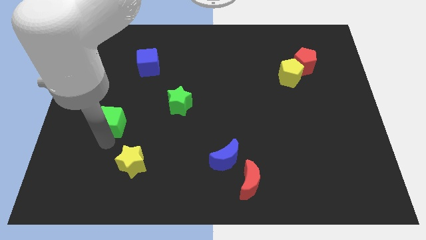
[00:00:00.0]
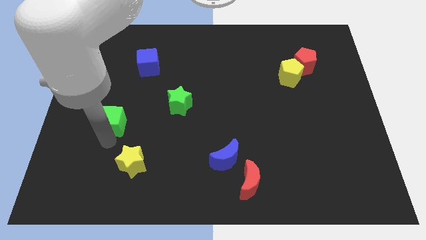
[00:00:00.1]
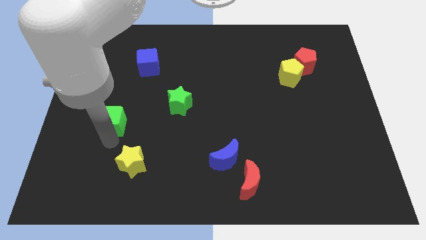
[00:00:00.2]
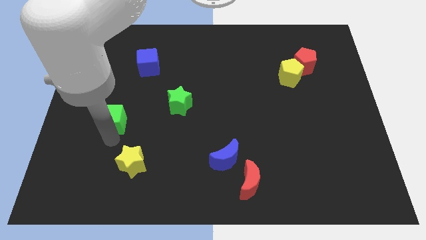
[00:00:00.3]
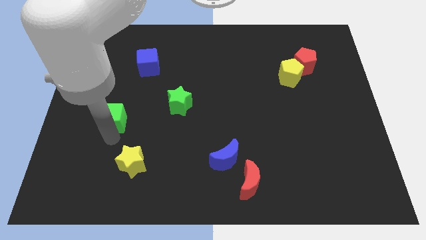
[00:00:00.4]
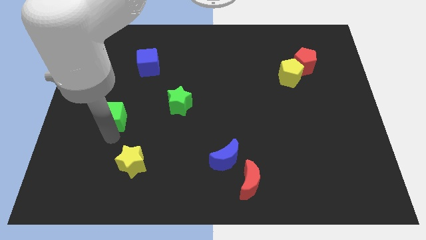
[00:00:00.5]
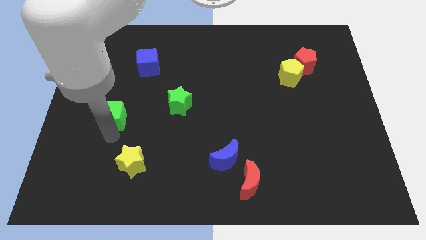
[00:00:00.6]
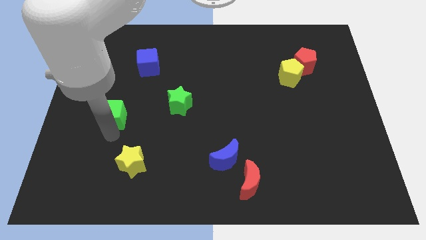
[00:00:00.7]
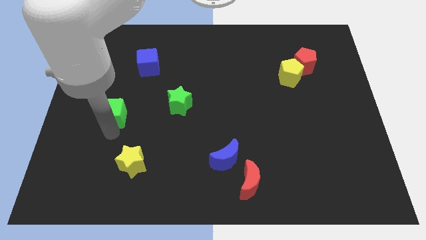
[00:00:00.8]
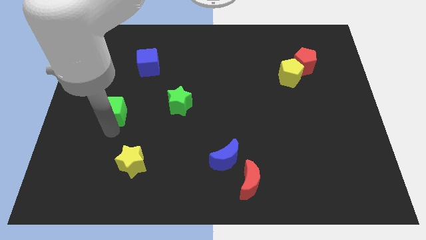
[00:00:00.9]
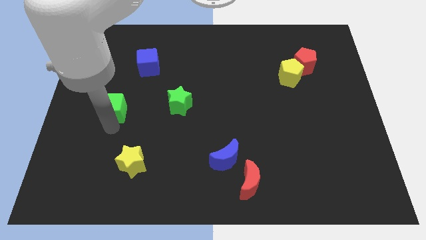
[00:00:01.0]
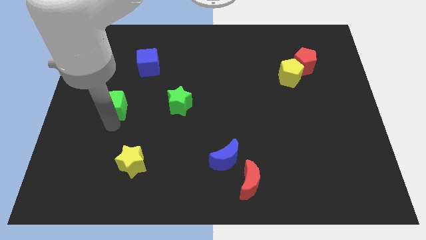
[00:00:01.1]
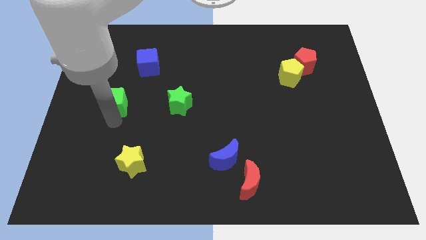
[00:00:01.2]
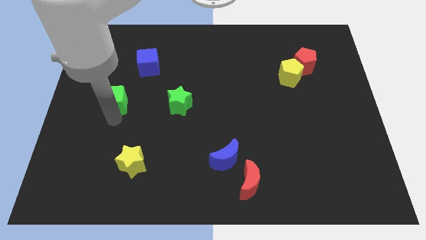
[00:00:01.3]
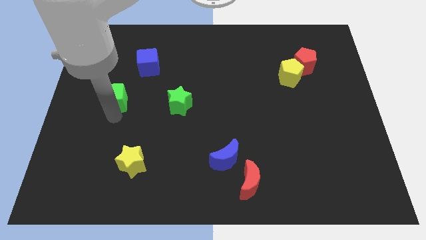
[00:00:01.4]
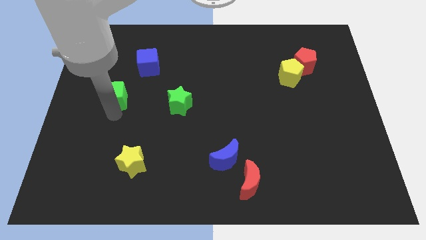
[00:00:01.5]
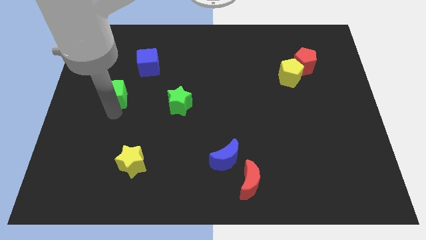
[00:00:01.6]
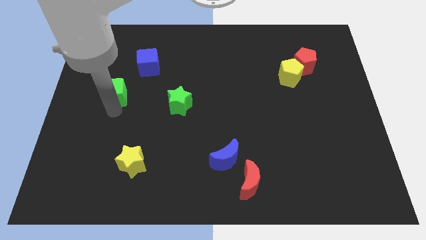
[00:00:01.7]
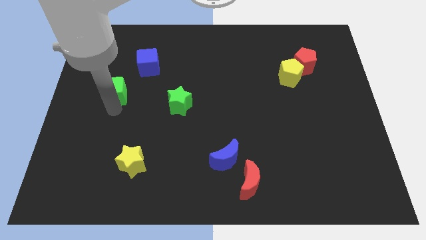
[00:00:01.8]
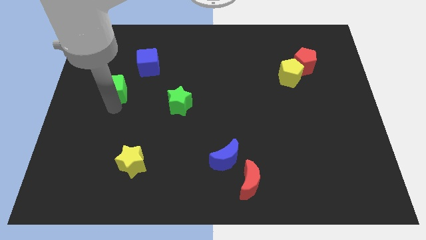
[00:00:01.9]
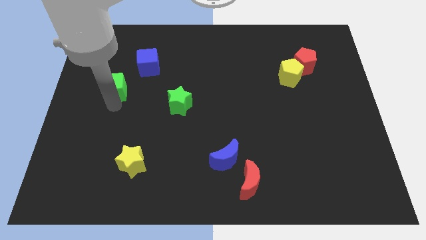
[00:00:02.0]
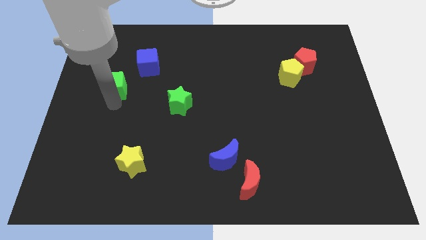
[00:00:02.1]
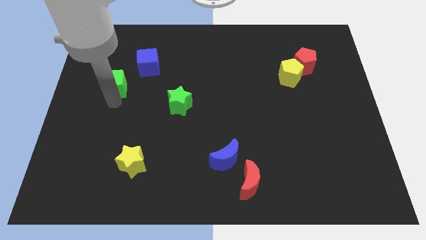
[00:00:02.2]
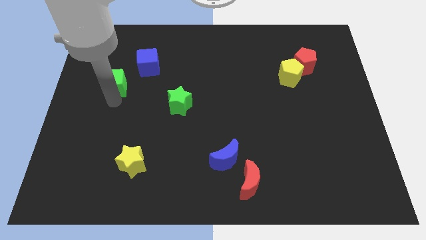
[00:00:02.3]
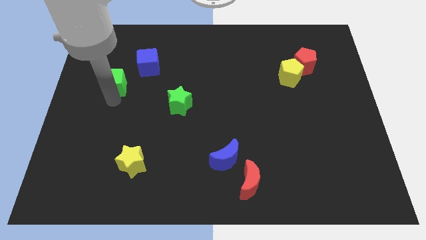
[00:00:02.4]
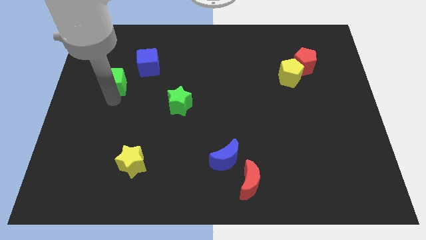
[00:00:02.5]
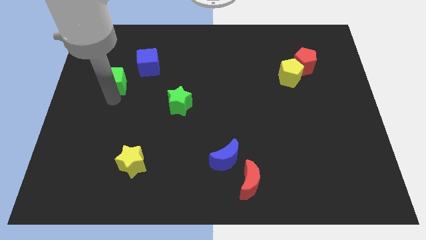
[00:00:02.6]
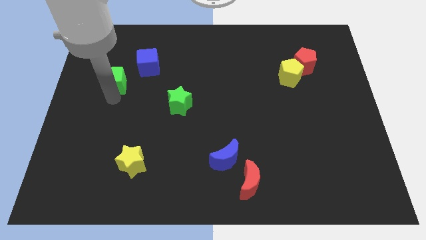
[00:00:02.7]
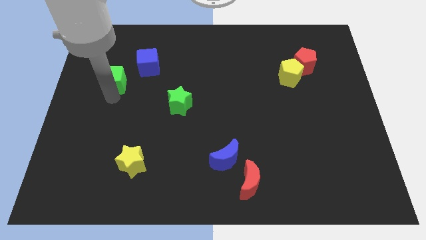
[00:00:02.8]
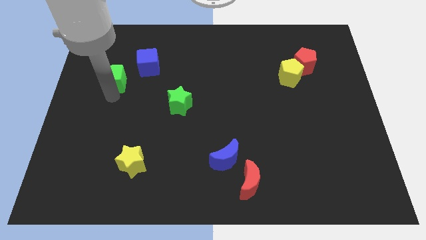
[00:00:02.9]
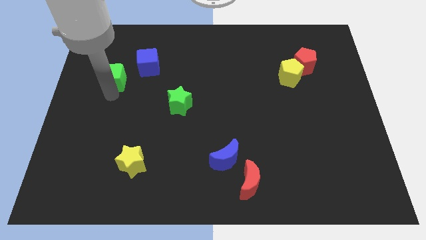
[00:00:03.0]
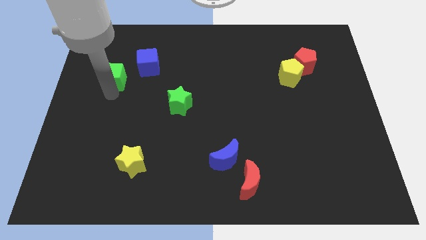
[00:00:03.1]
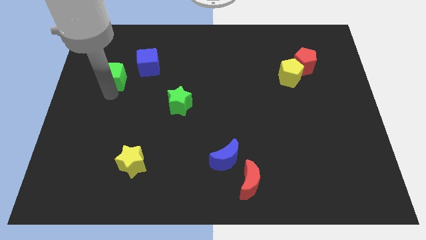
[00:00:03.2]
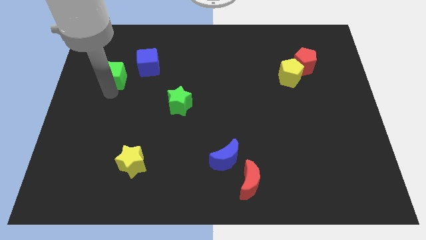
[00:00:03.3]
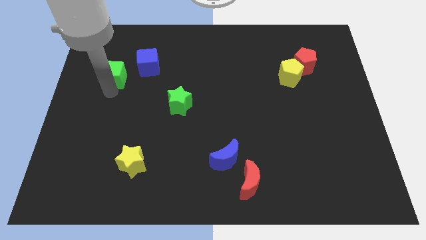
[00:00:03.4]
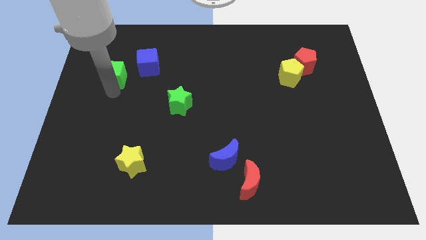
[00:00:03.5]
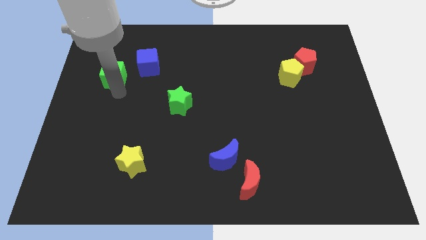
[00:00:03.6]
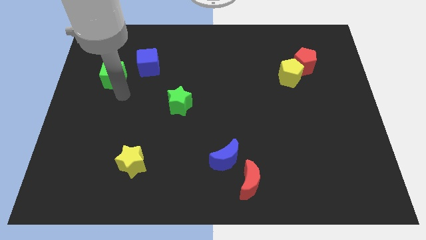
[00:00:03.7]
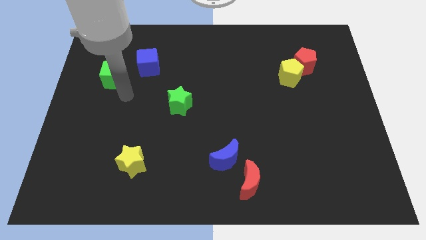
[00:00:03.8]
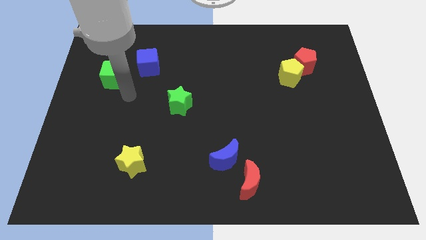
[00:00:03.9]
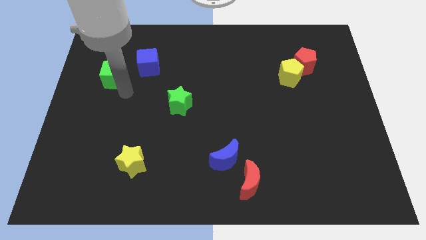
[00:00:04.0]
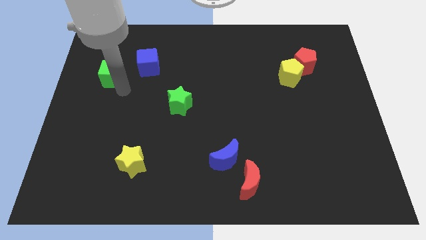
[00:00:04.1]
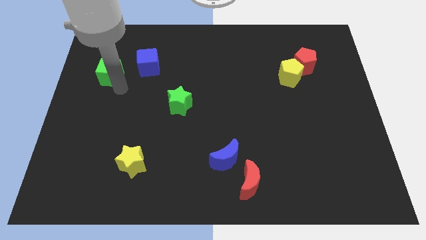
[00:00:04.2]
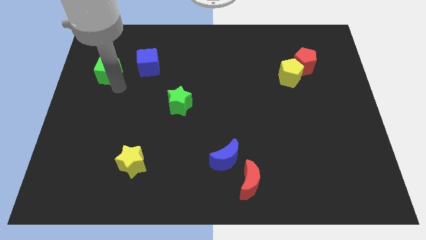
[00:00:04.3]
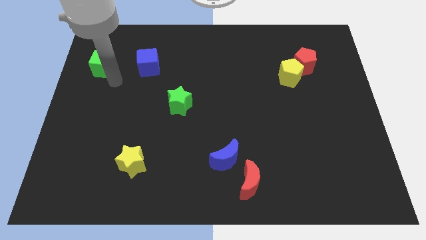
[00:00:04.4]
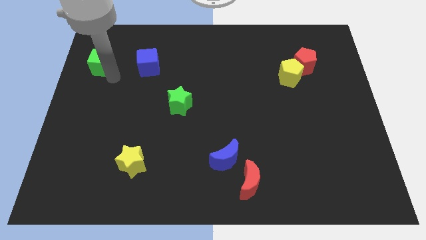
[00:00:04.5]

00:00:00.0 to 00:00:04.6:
place the green cube left to the blue cube

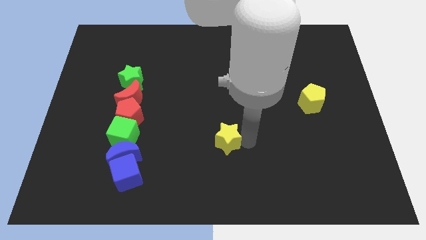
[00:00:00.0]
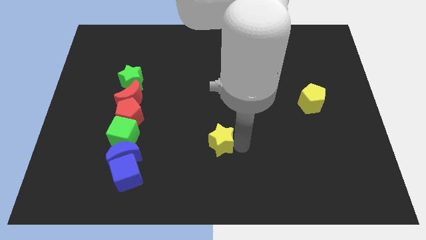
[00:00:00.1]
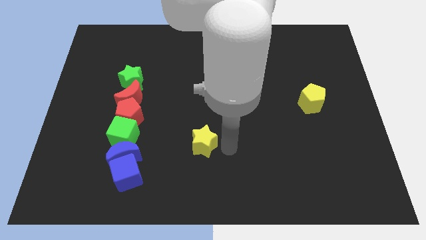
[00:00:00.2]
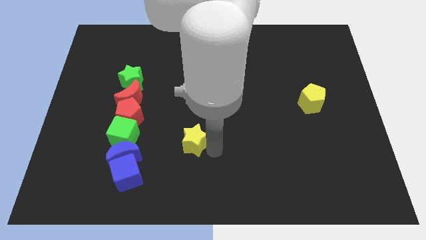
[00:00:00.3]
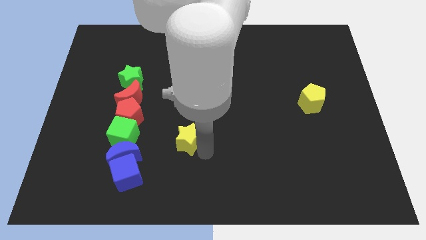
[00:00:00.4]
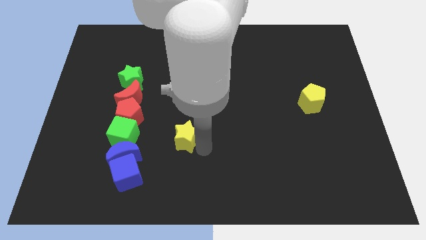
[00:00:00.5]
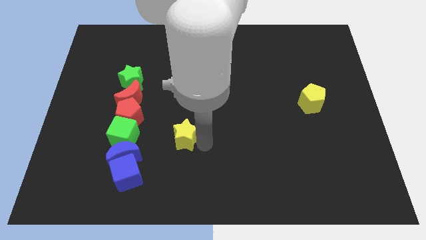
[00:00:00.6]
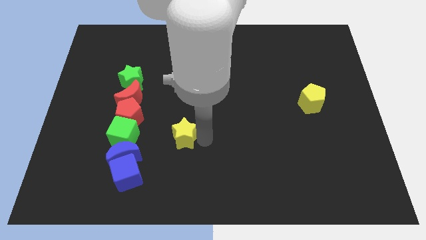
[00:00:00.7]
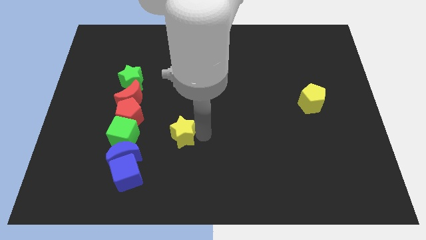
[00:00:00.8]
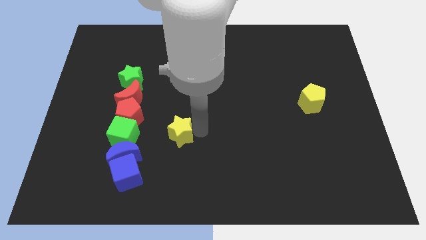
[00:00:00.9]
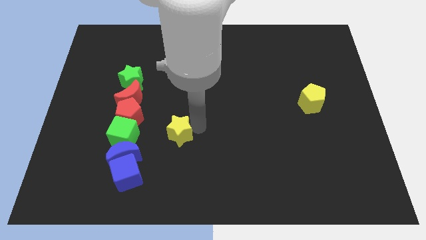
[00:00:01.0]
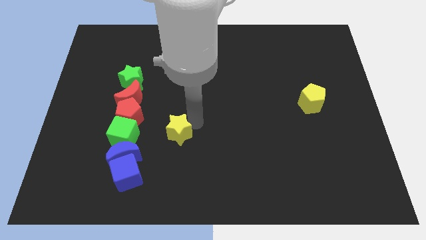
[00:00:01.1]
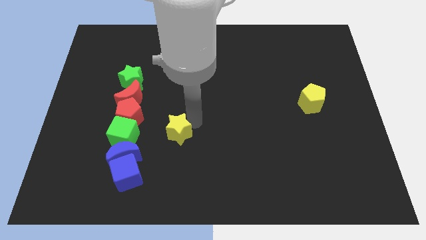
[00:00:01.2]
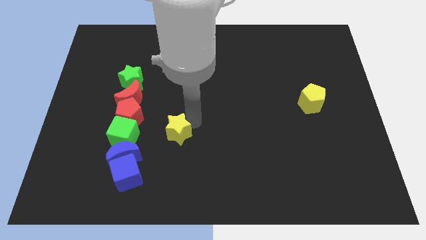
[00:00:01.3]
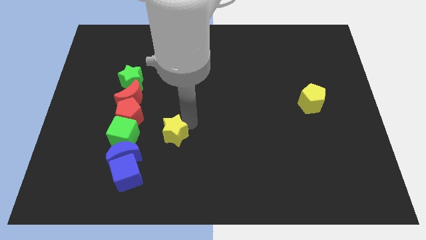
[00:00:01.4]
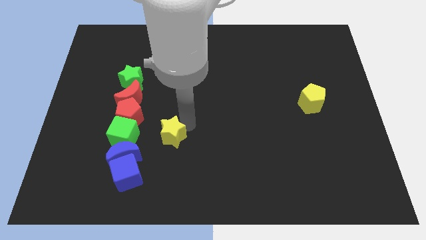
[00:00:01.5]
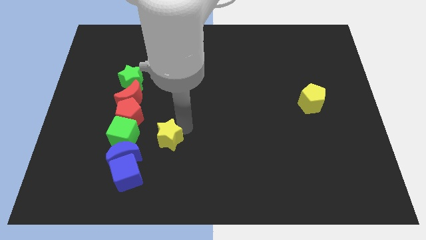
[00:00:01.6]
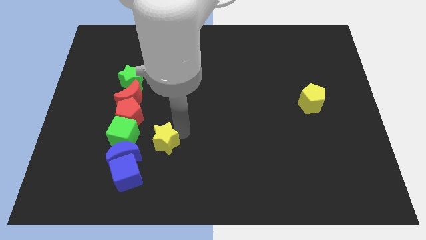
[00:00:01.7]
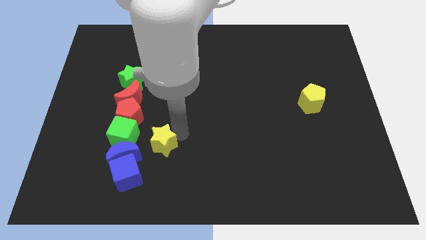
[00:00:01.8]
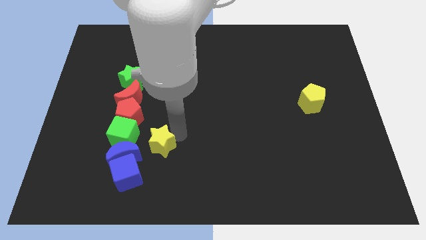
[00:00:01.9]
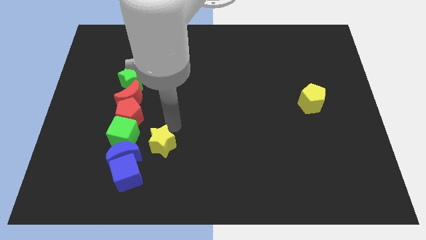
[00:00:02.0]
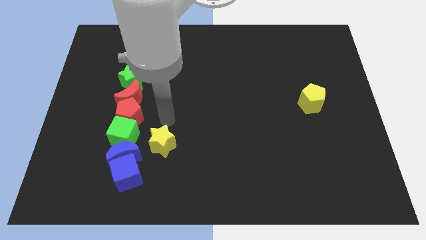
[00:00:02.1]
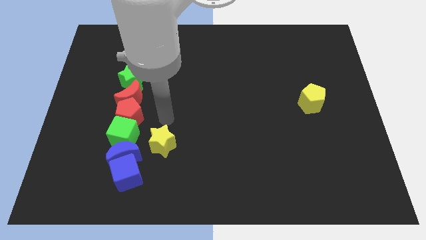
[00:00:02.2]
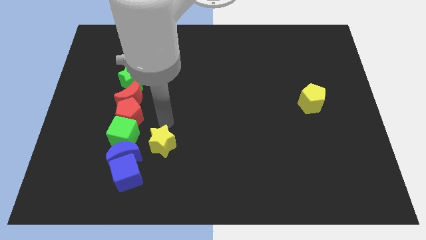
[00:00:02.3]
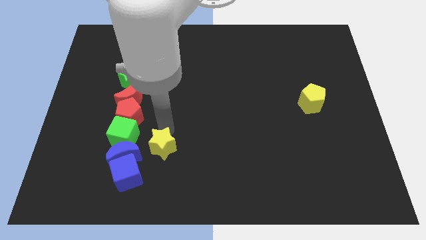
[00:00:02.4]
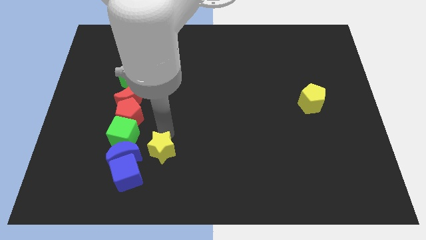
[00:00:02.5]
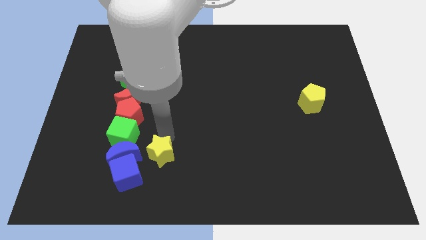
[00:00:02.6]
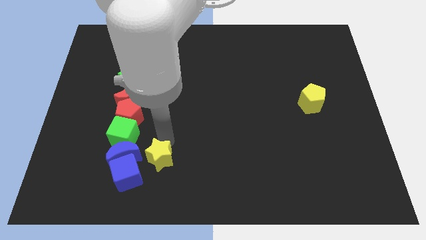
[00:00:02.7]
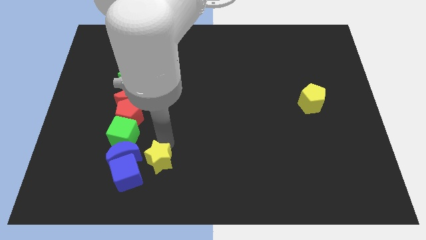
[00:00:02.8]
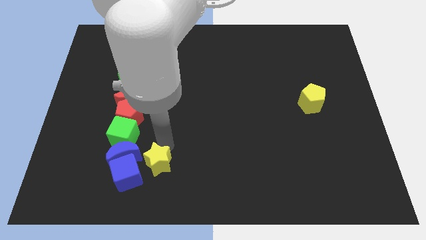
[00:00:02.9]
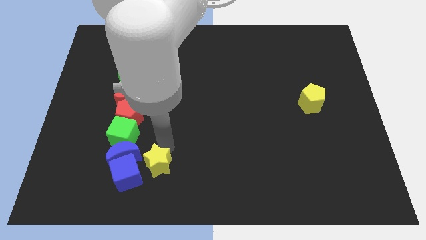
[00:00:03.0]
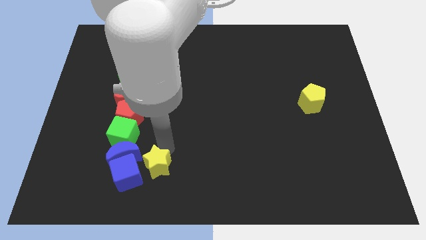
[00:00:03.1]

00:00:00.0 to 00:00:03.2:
push the yellow star to the right of blue cube

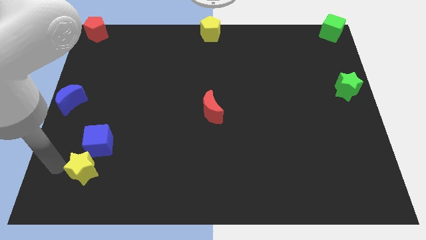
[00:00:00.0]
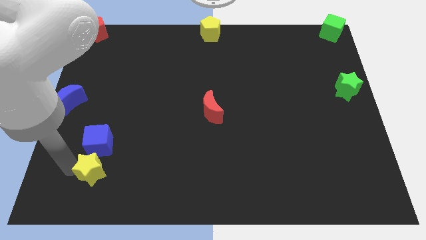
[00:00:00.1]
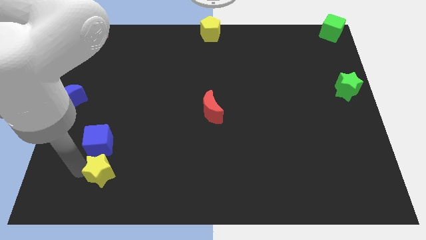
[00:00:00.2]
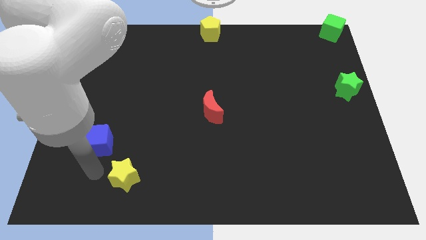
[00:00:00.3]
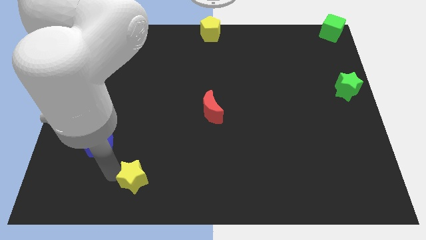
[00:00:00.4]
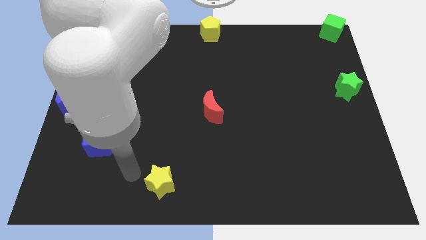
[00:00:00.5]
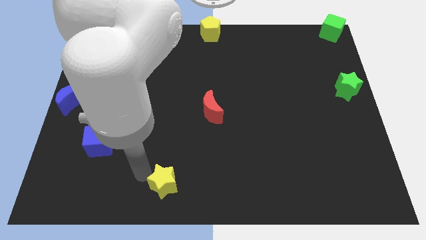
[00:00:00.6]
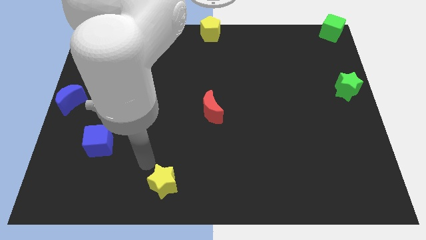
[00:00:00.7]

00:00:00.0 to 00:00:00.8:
push the yellow star towards right

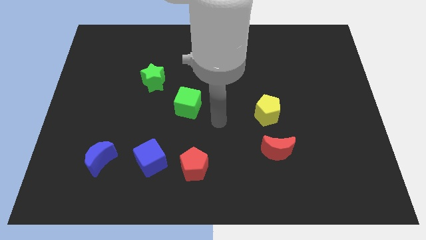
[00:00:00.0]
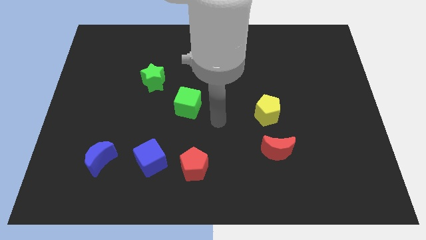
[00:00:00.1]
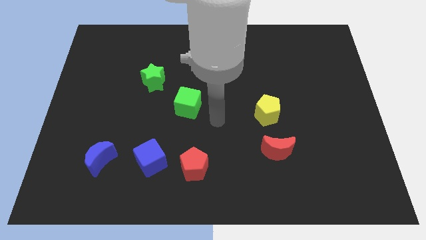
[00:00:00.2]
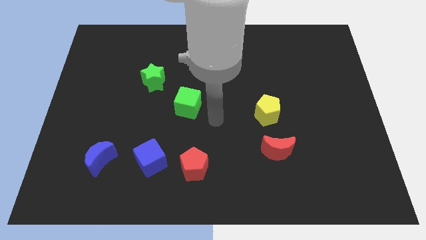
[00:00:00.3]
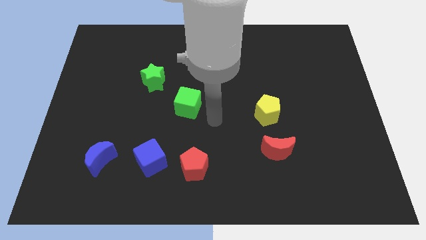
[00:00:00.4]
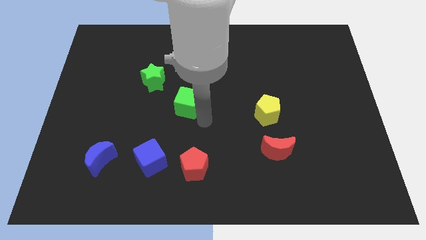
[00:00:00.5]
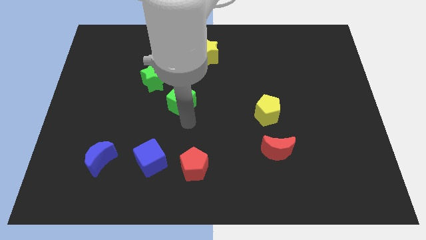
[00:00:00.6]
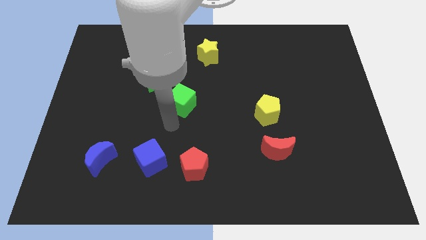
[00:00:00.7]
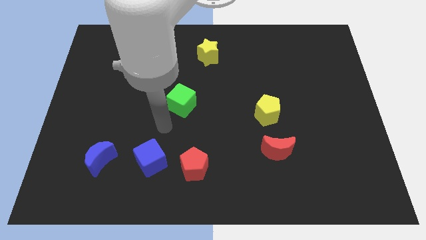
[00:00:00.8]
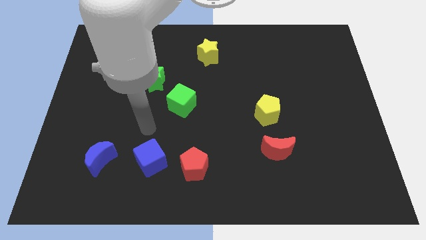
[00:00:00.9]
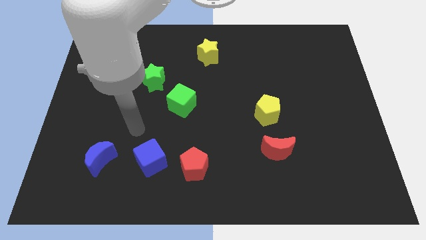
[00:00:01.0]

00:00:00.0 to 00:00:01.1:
move your arm to the top left of the blue cube
